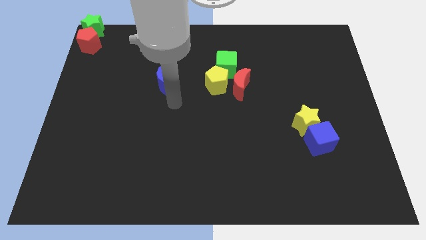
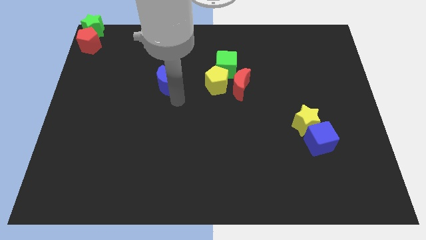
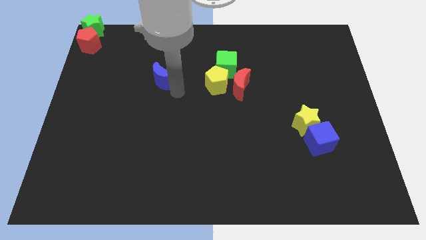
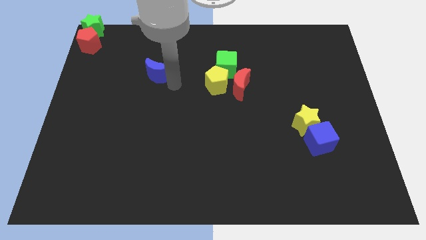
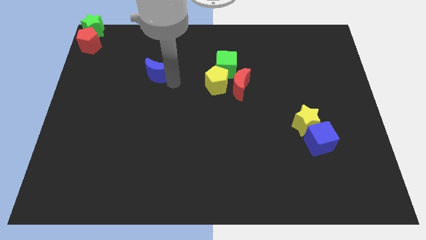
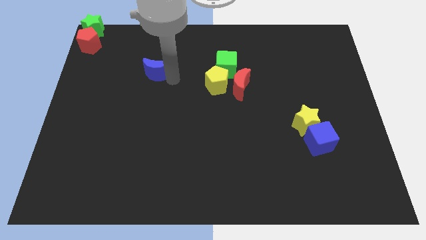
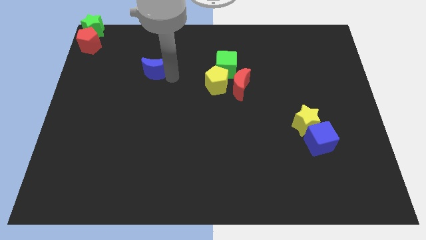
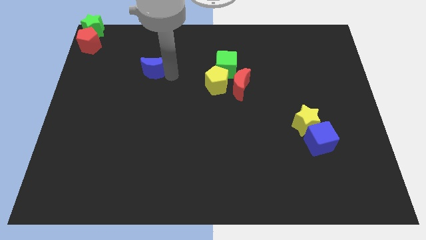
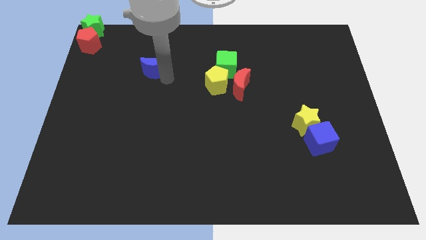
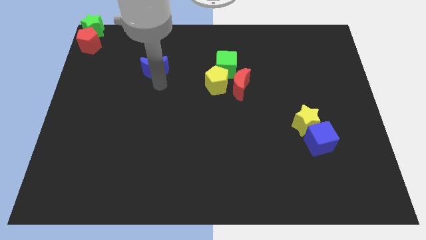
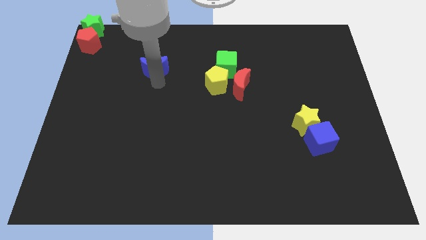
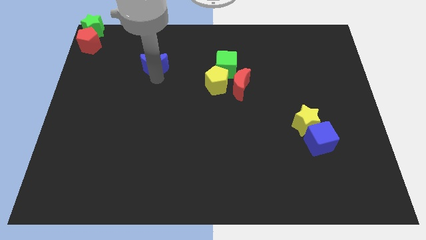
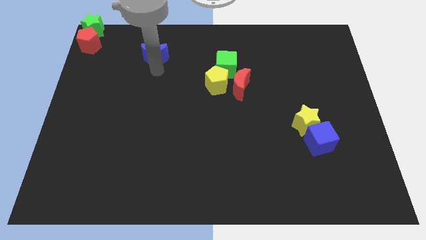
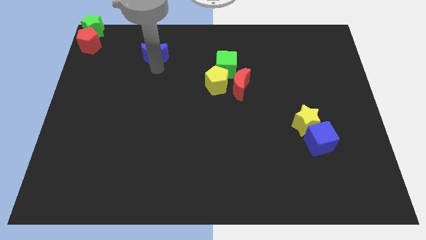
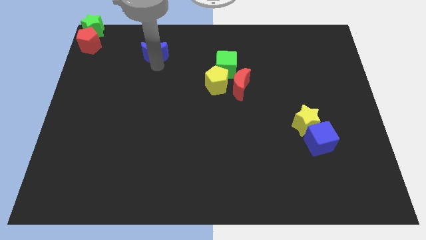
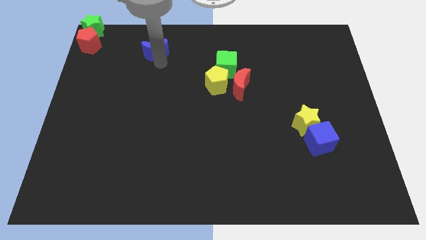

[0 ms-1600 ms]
push the blue crescent to the top of the board

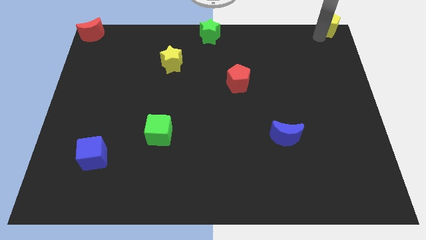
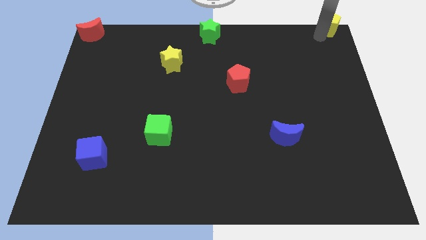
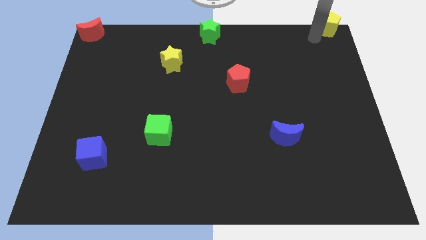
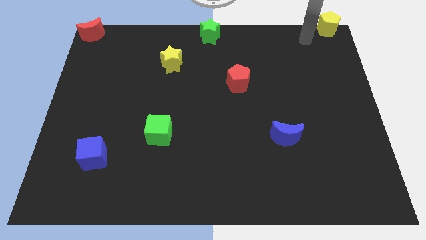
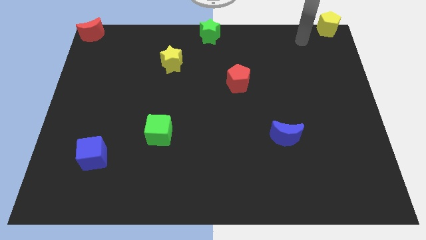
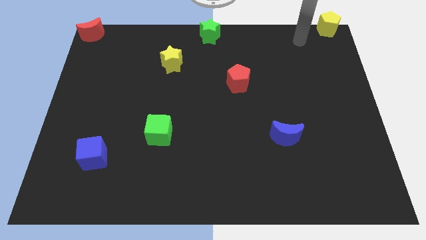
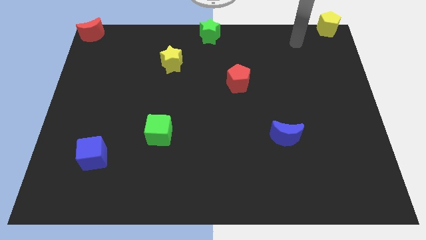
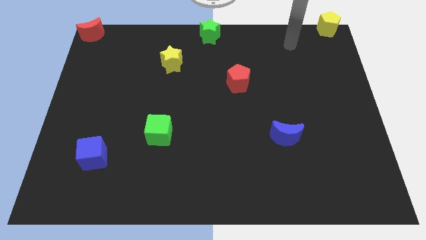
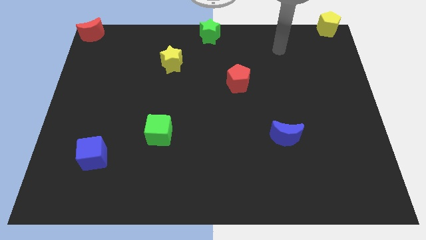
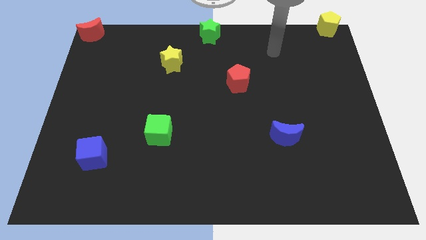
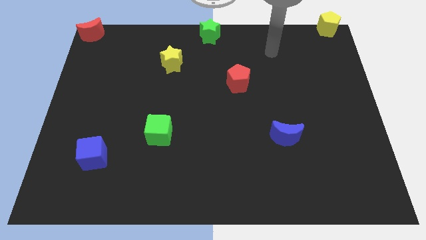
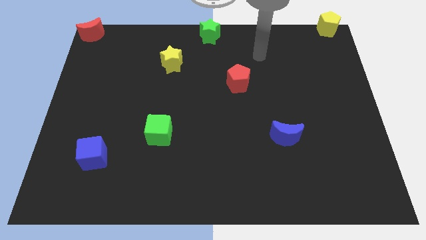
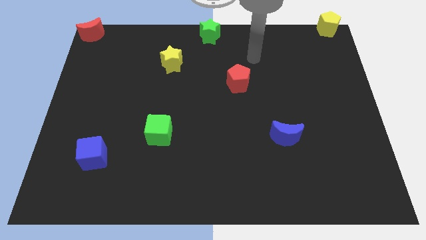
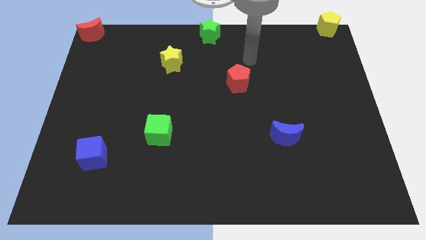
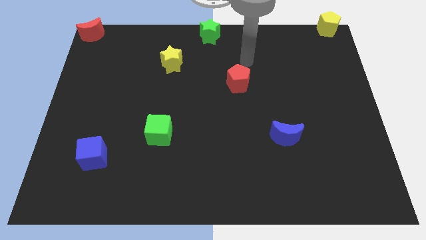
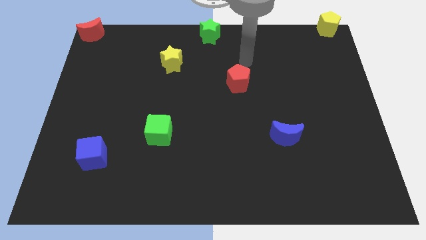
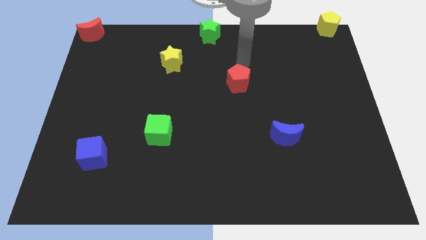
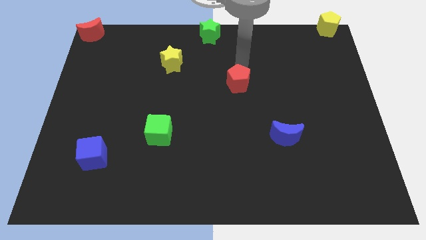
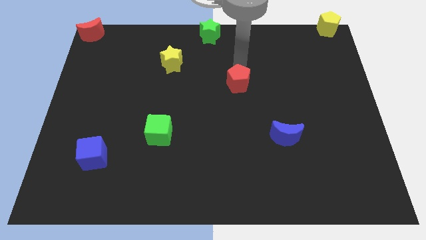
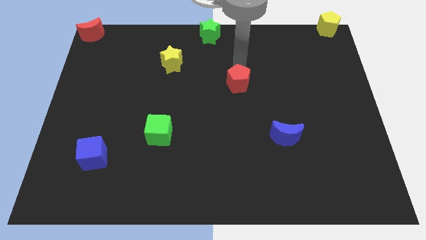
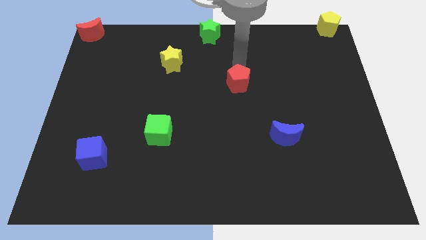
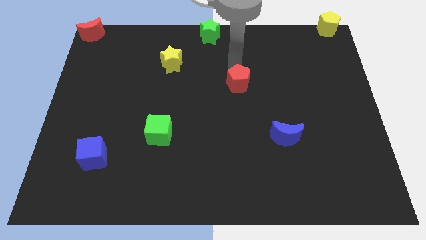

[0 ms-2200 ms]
place the arm above the red pentagon

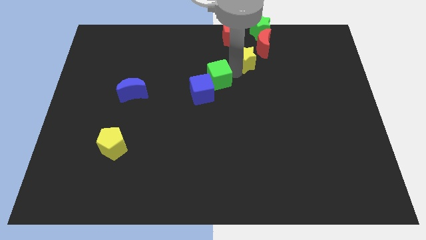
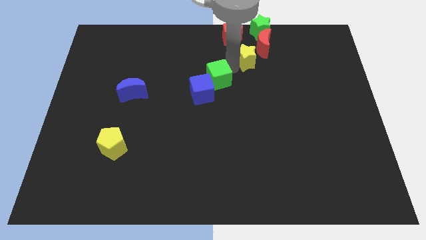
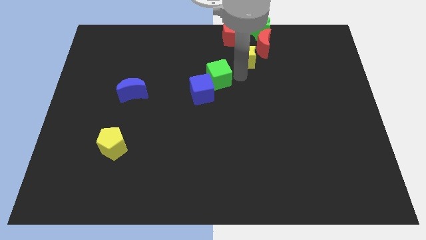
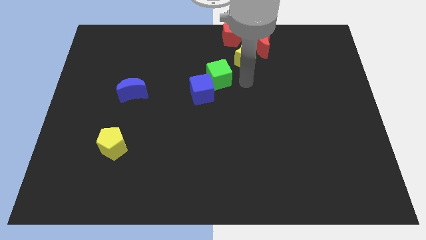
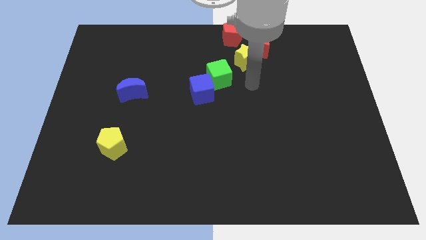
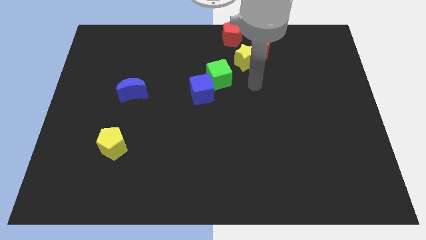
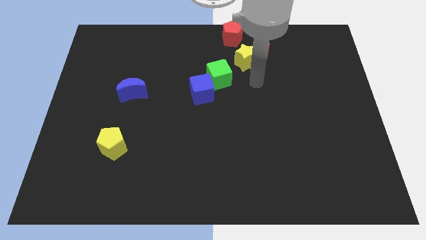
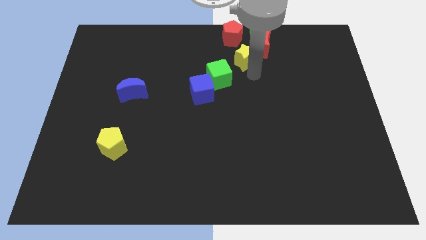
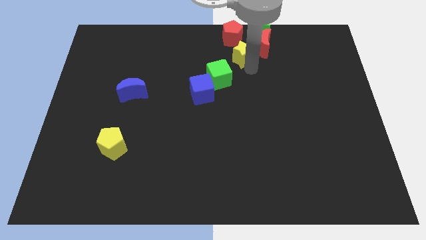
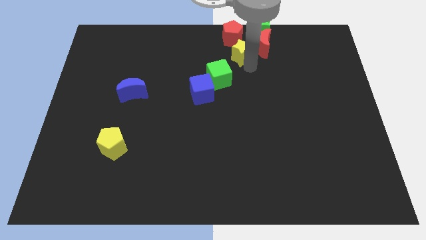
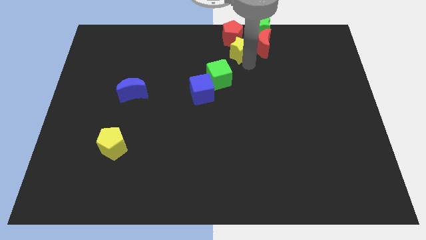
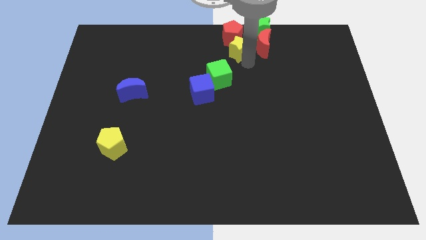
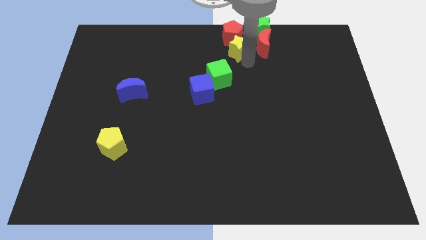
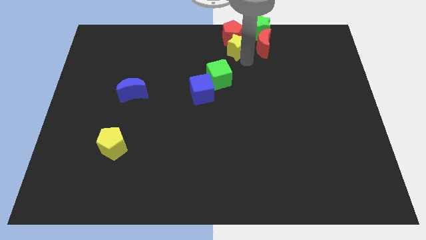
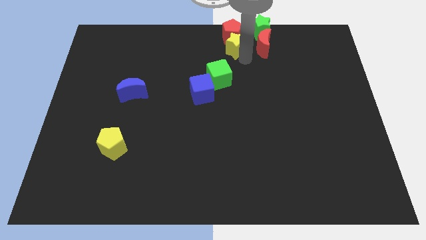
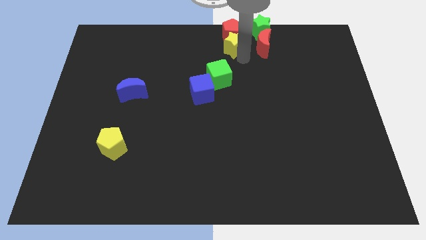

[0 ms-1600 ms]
push the yellow star into the red pentagon

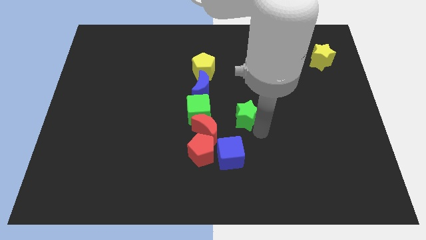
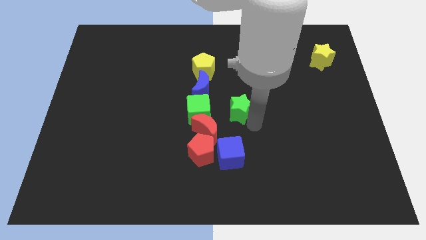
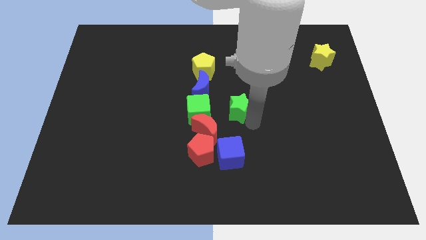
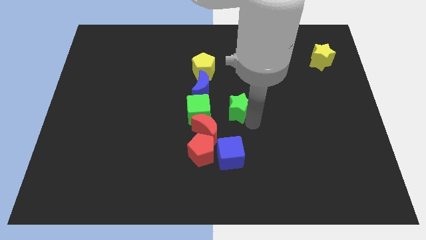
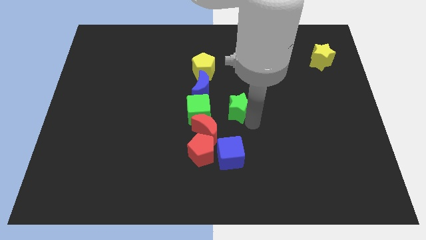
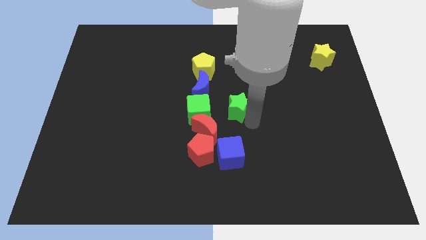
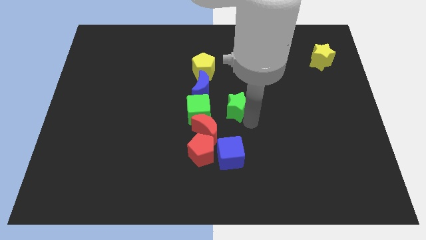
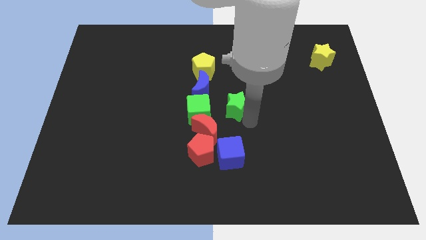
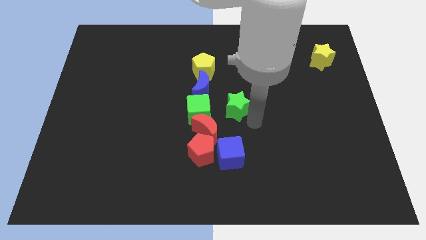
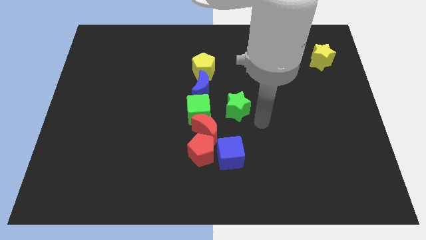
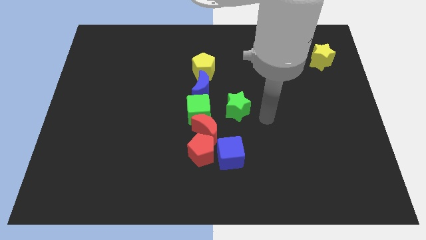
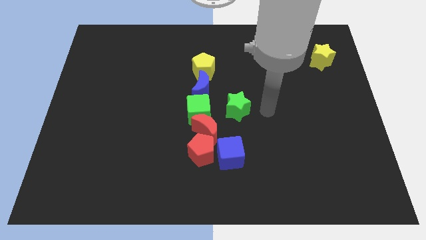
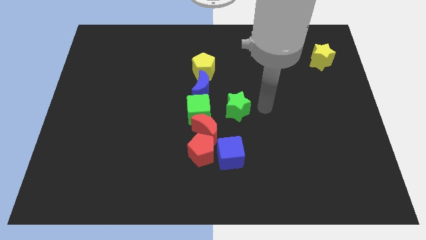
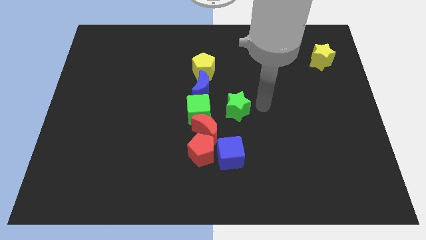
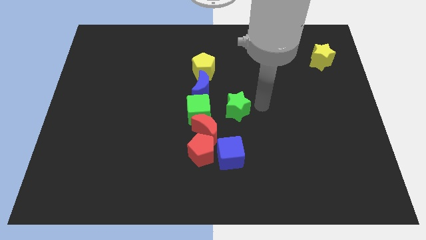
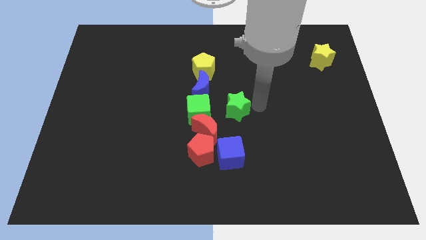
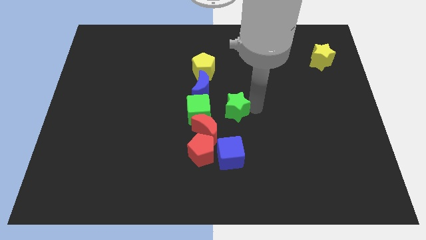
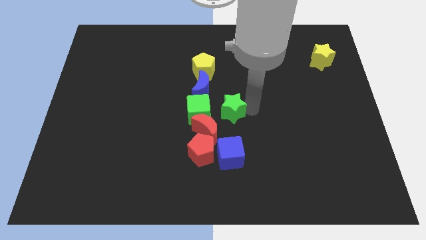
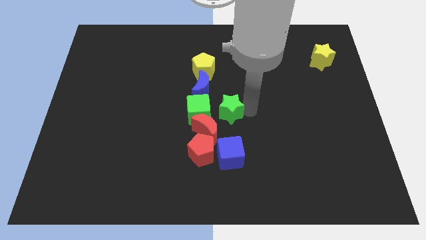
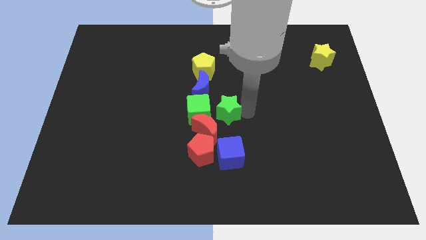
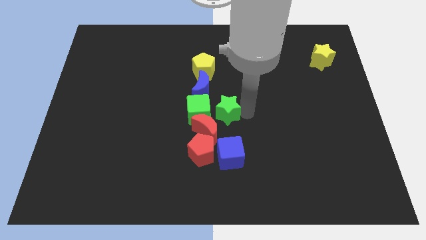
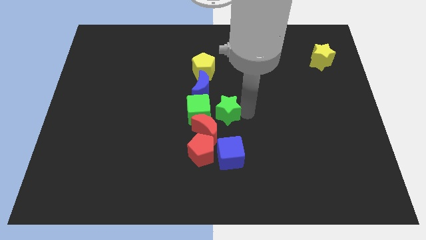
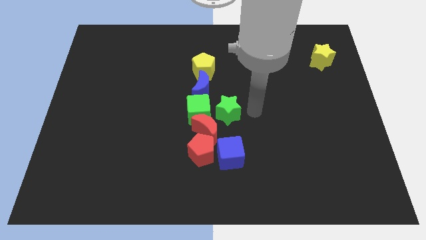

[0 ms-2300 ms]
move the green star right to the green cube

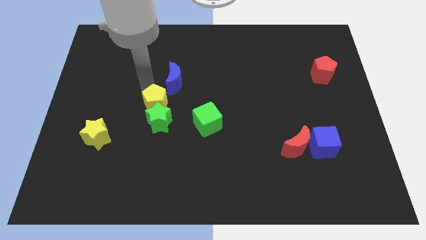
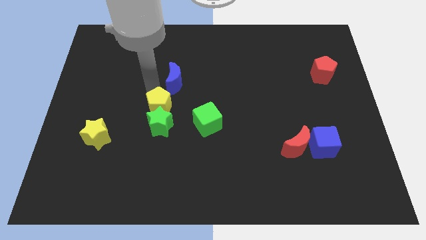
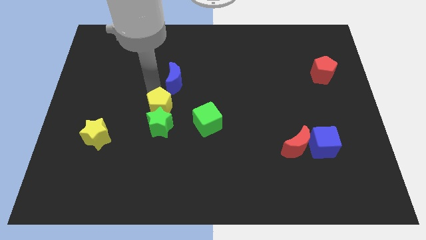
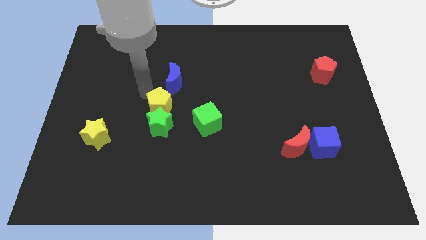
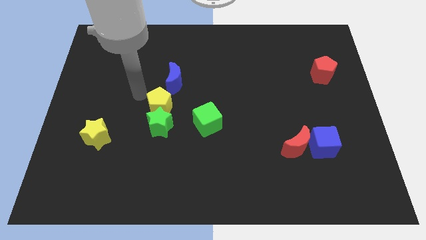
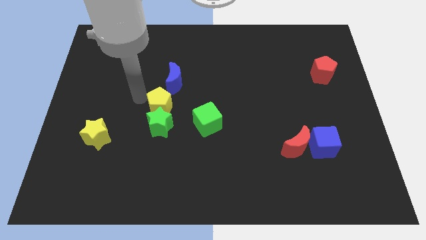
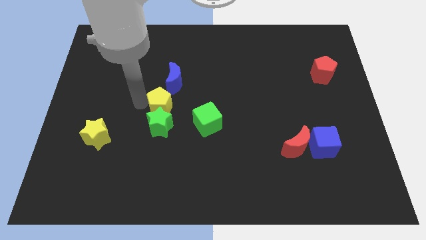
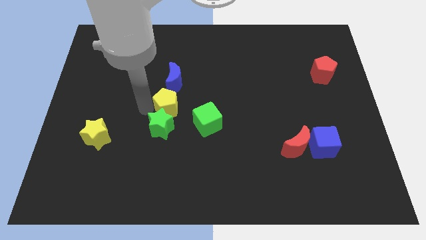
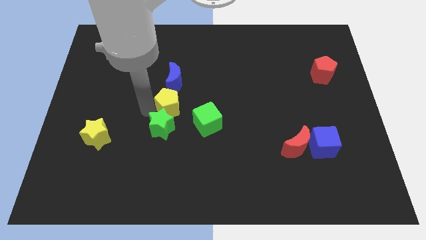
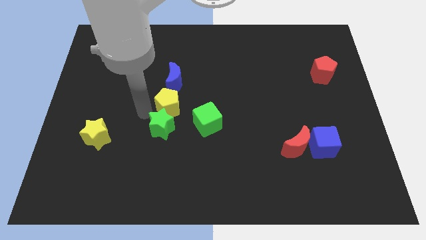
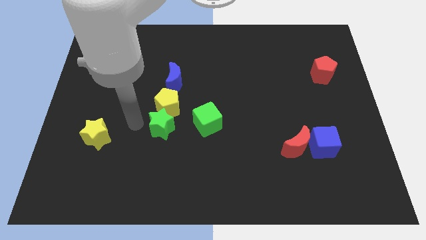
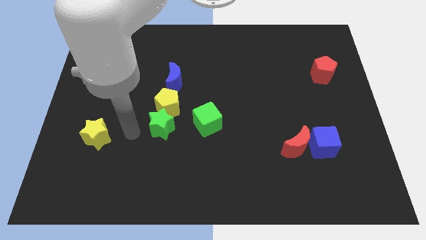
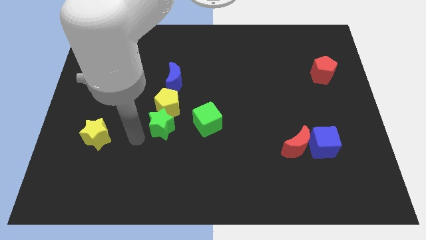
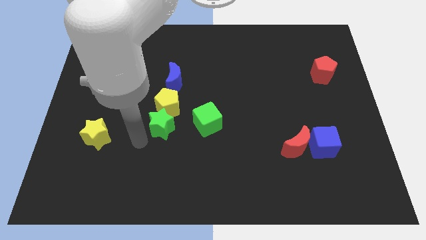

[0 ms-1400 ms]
place the yellow pentagon in between the blue crescent and the green star
